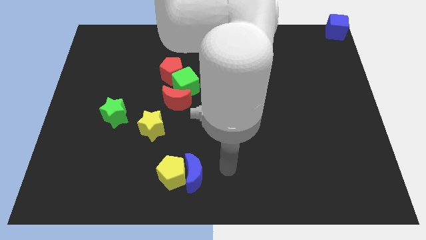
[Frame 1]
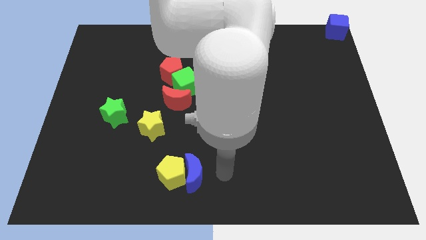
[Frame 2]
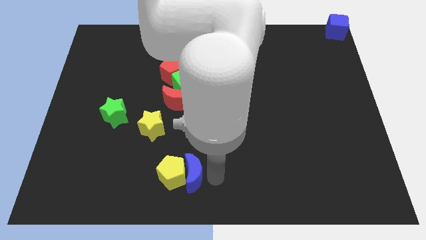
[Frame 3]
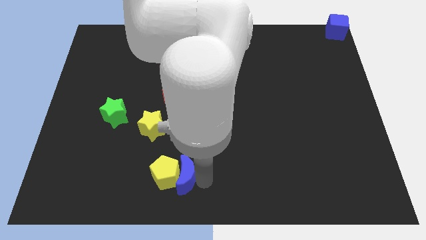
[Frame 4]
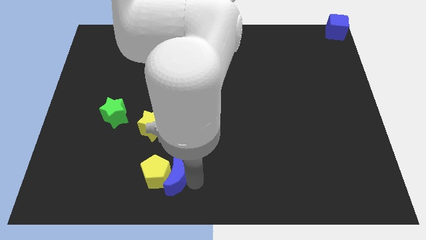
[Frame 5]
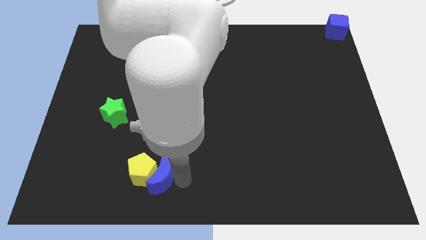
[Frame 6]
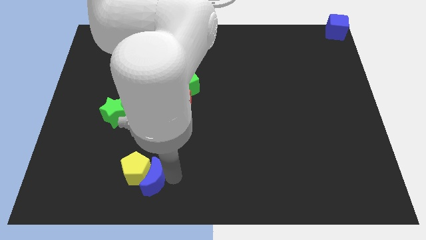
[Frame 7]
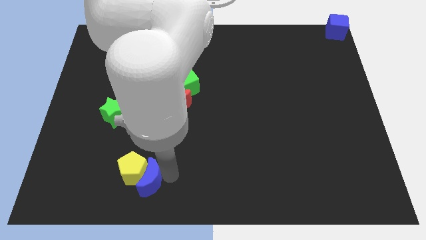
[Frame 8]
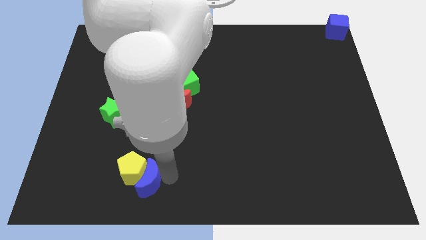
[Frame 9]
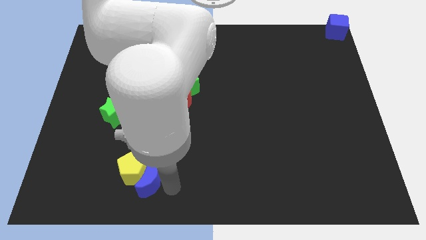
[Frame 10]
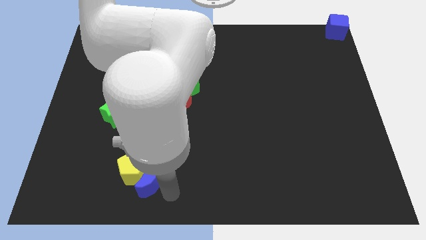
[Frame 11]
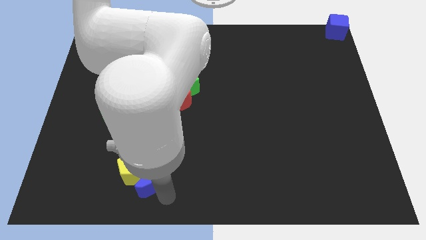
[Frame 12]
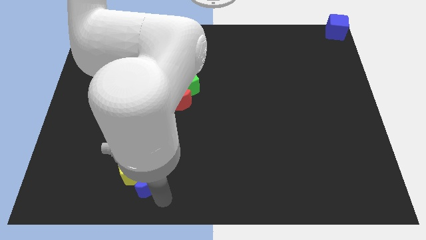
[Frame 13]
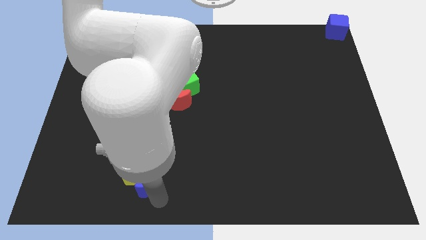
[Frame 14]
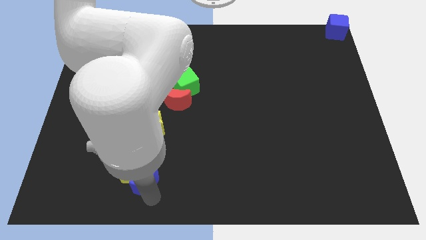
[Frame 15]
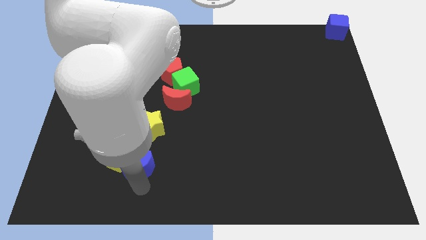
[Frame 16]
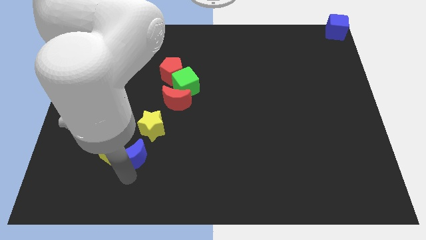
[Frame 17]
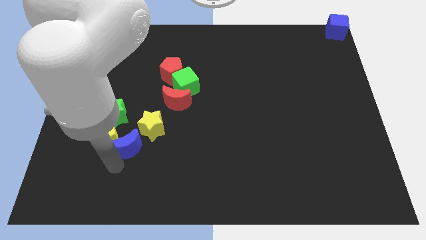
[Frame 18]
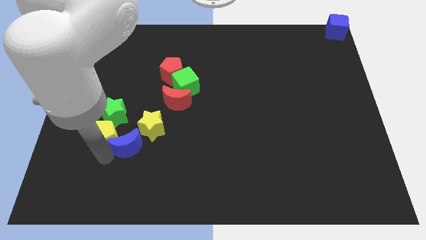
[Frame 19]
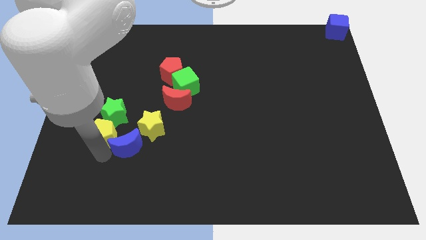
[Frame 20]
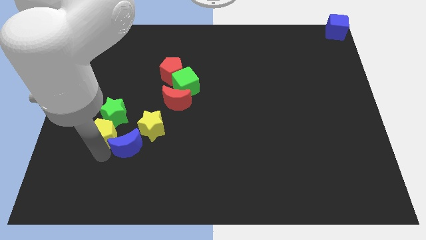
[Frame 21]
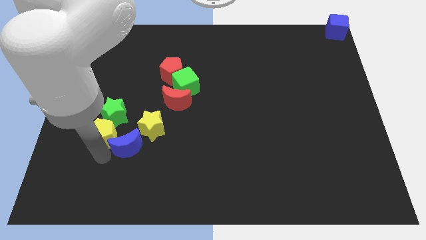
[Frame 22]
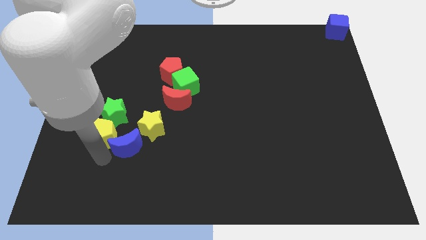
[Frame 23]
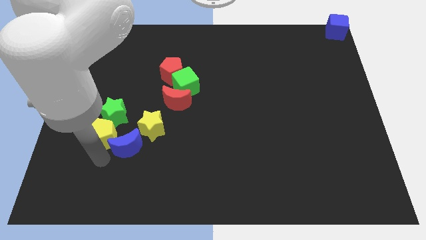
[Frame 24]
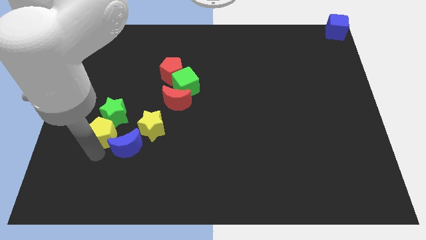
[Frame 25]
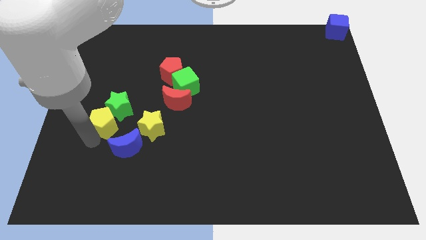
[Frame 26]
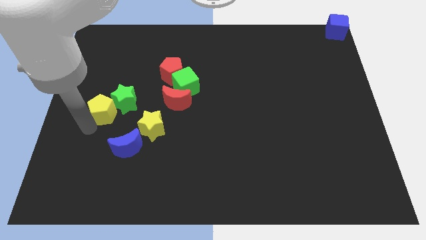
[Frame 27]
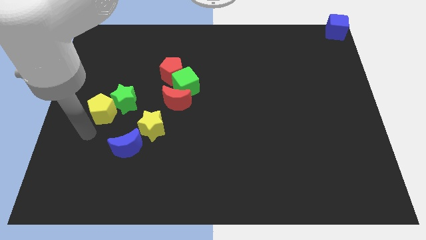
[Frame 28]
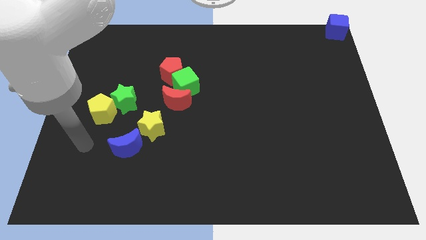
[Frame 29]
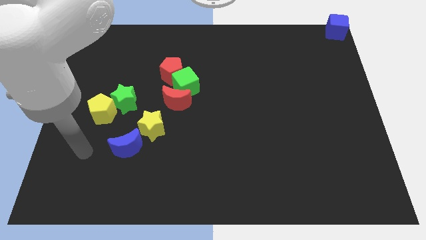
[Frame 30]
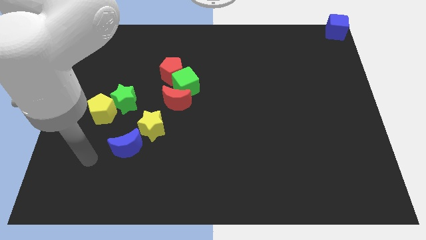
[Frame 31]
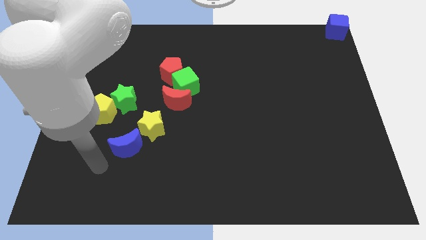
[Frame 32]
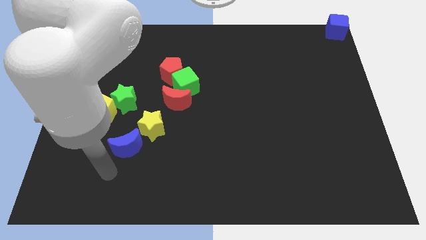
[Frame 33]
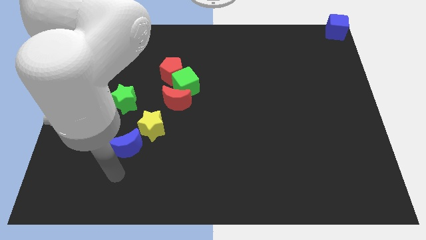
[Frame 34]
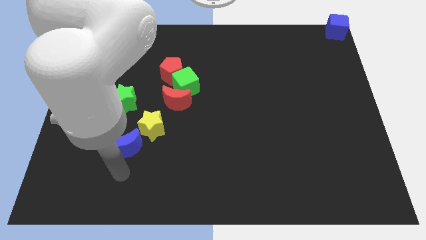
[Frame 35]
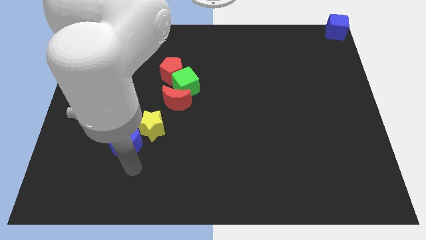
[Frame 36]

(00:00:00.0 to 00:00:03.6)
push the yellow pentagon to the bottom left of green star

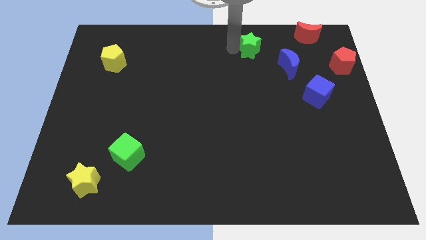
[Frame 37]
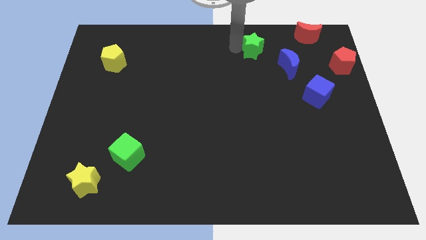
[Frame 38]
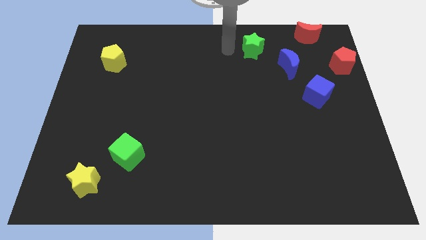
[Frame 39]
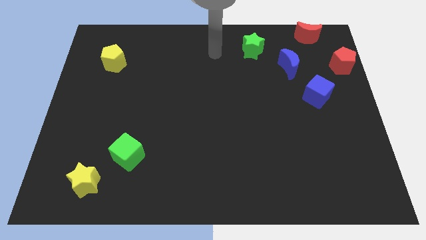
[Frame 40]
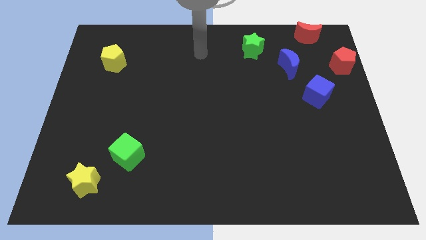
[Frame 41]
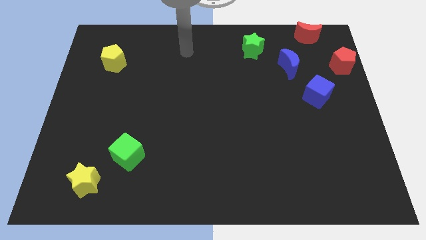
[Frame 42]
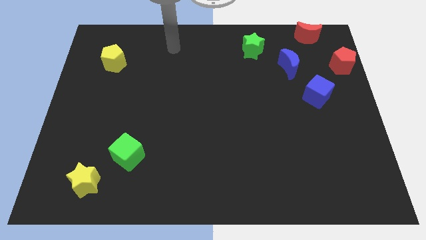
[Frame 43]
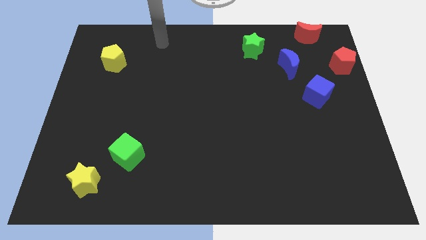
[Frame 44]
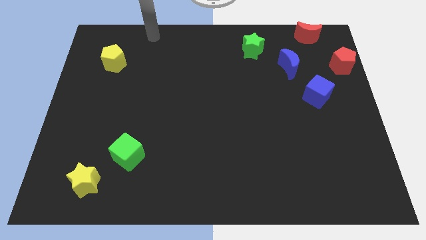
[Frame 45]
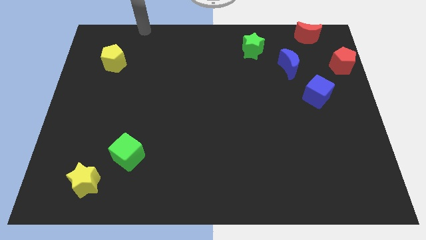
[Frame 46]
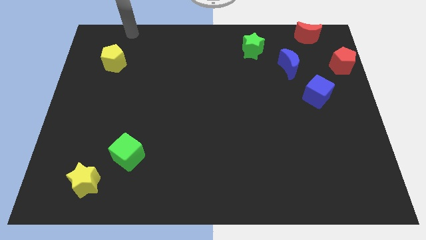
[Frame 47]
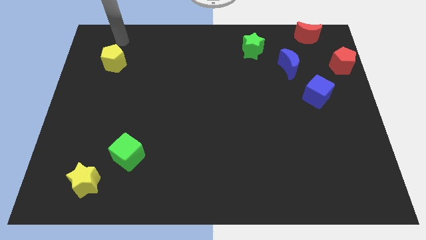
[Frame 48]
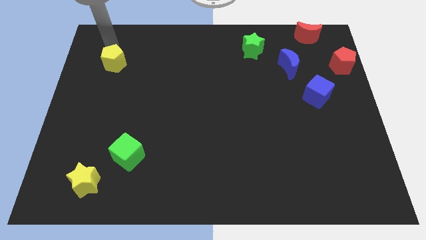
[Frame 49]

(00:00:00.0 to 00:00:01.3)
move the arm away from the green star

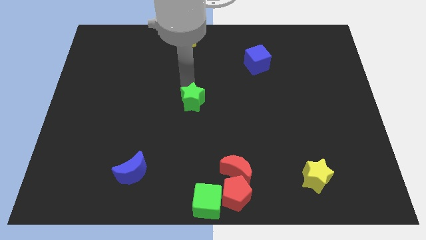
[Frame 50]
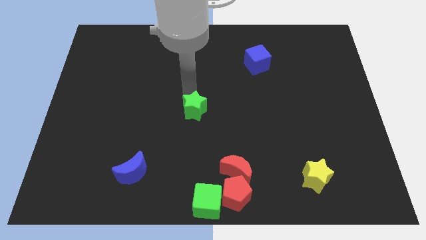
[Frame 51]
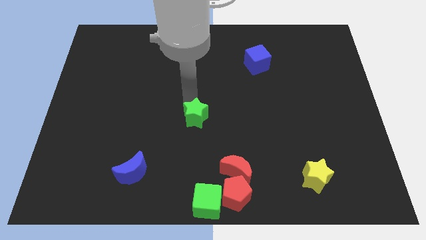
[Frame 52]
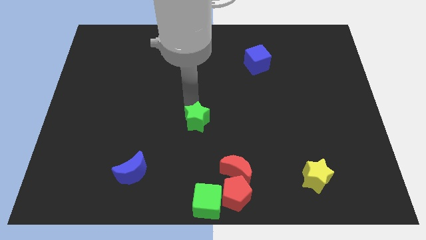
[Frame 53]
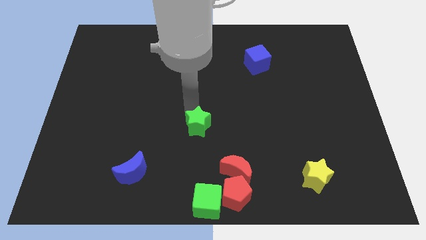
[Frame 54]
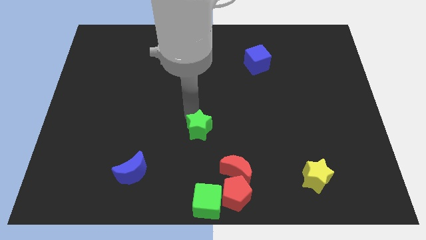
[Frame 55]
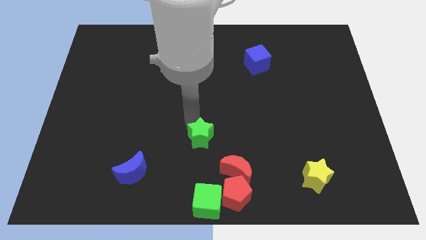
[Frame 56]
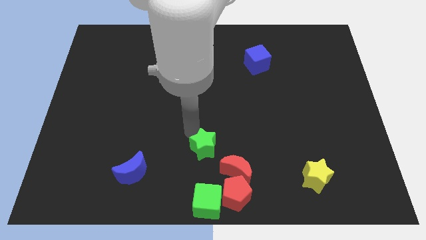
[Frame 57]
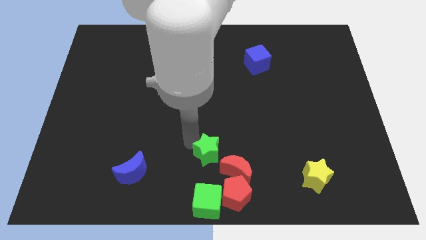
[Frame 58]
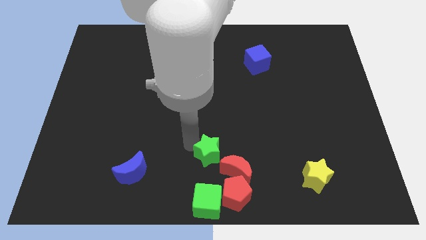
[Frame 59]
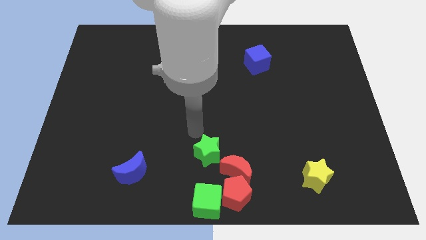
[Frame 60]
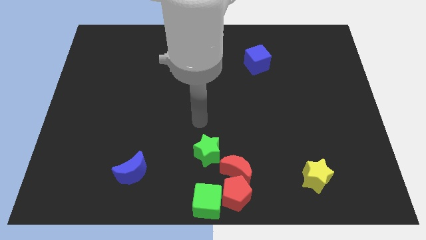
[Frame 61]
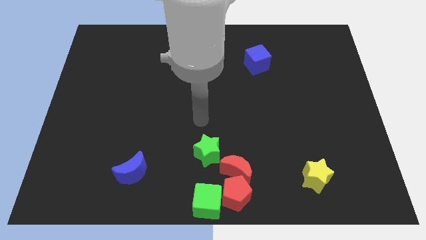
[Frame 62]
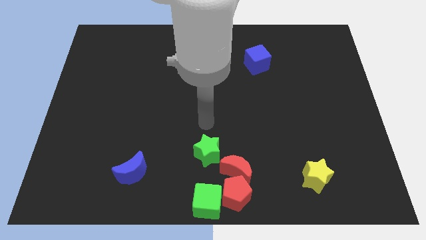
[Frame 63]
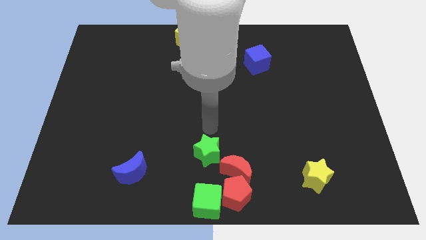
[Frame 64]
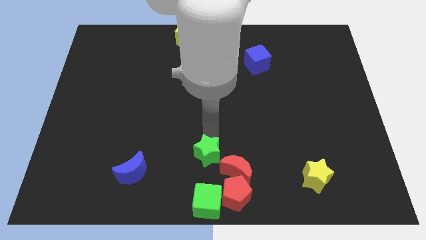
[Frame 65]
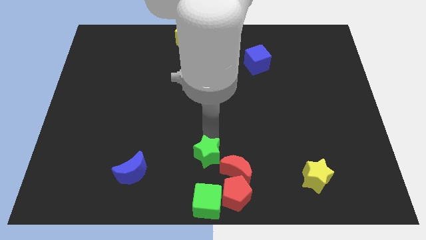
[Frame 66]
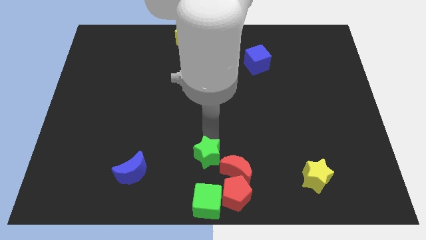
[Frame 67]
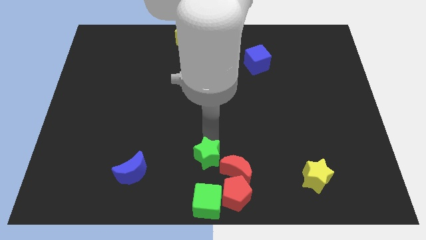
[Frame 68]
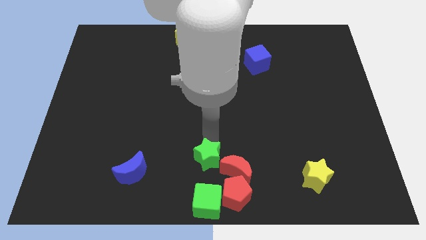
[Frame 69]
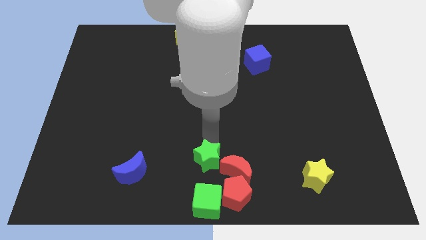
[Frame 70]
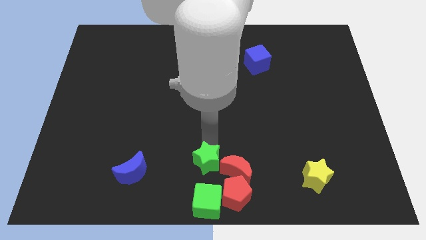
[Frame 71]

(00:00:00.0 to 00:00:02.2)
move green star near red moon

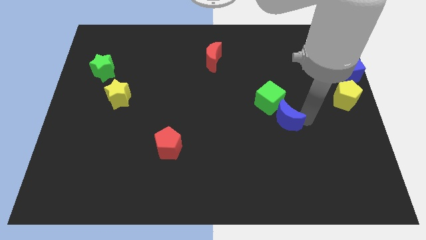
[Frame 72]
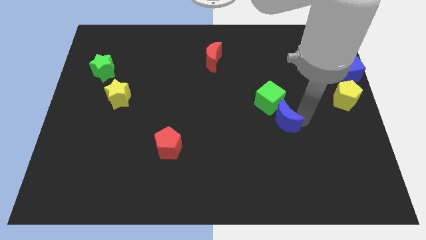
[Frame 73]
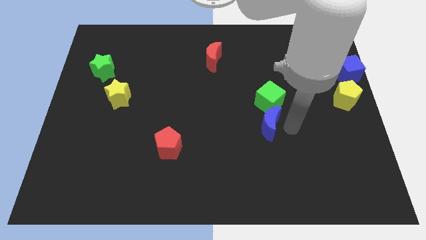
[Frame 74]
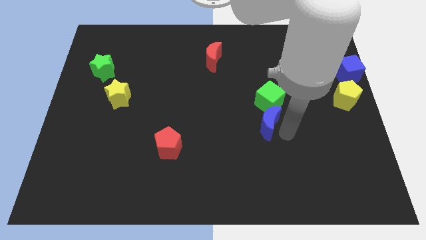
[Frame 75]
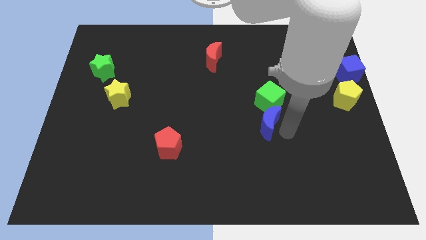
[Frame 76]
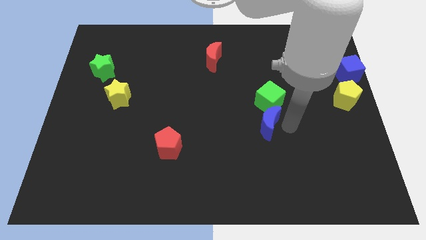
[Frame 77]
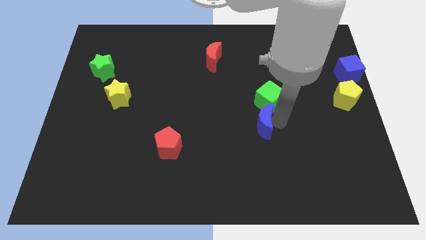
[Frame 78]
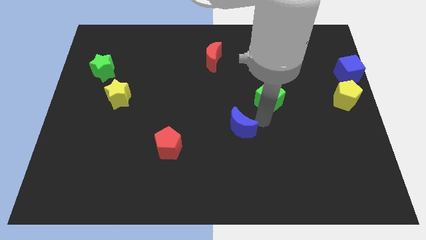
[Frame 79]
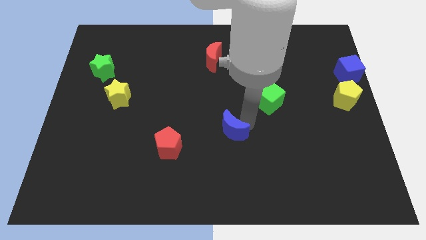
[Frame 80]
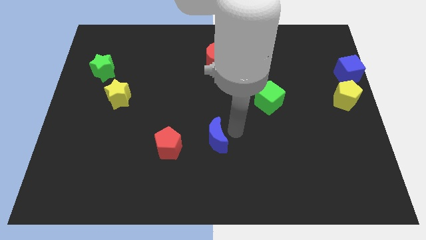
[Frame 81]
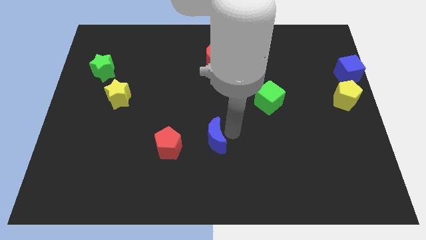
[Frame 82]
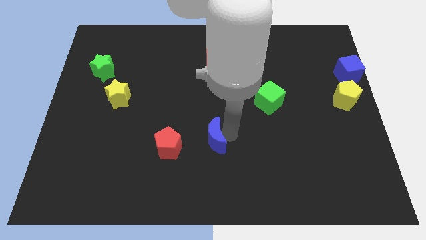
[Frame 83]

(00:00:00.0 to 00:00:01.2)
separate the blue crescent from the green cube

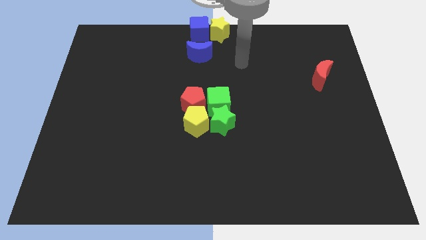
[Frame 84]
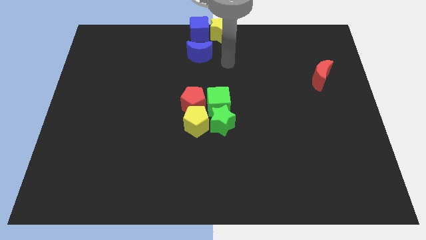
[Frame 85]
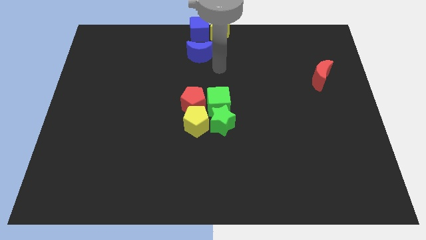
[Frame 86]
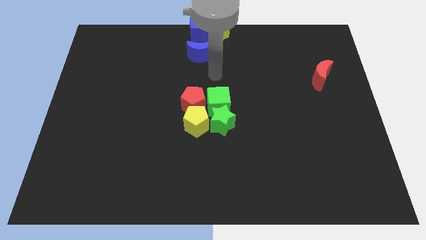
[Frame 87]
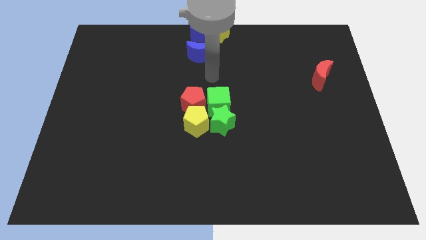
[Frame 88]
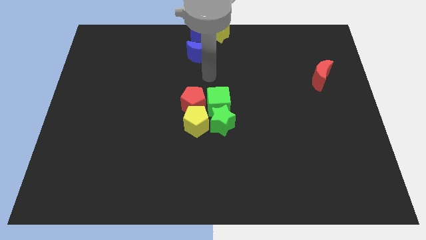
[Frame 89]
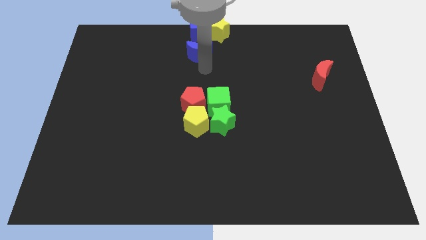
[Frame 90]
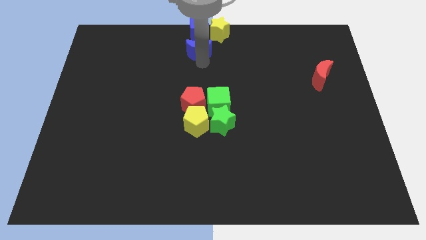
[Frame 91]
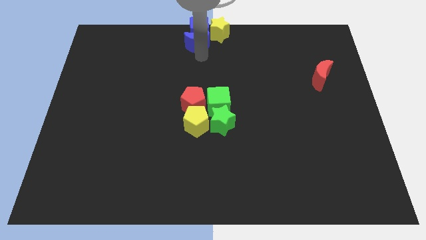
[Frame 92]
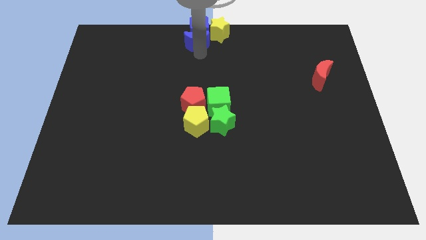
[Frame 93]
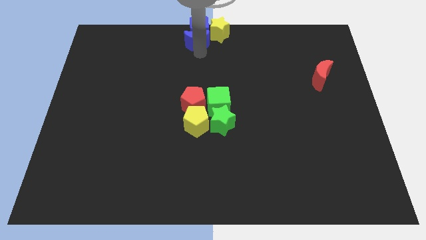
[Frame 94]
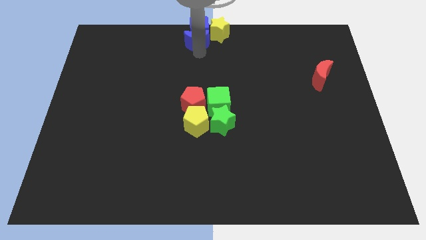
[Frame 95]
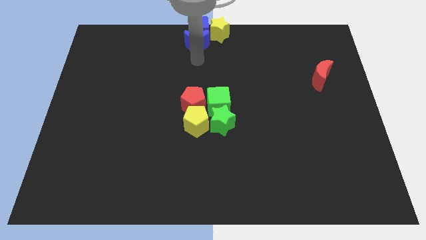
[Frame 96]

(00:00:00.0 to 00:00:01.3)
move the blue moon close to the blue cube
